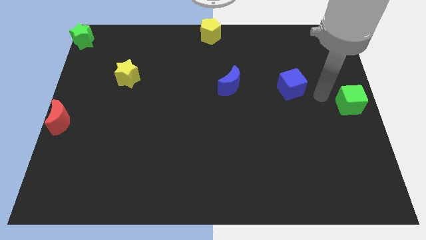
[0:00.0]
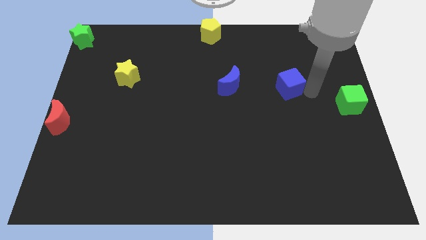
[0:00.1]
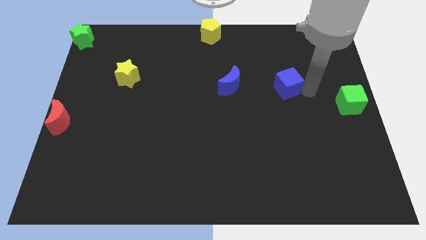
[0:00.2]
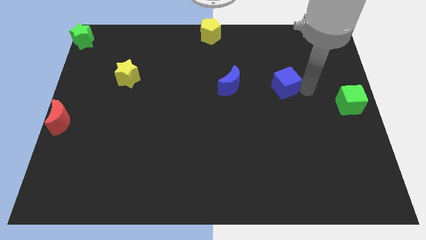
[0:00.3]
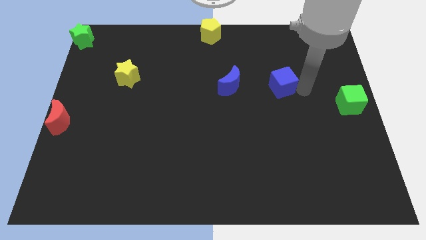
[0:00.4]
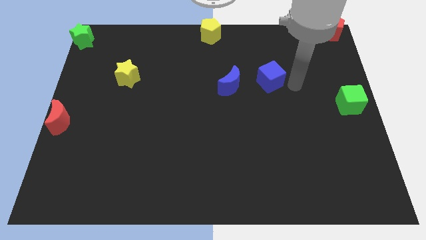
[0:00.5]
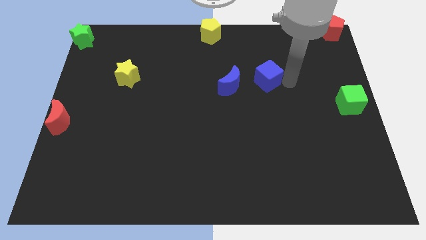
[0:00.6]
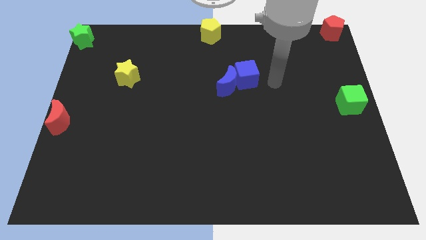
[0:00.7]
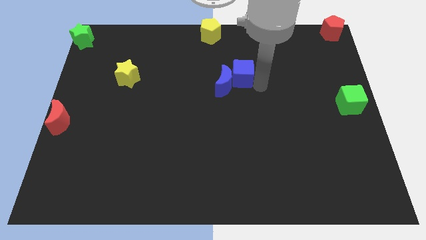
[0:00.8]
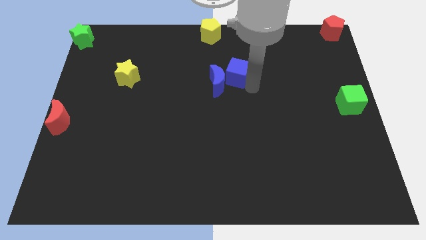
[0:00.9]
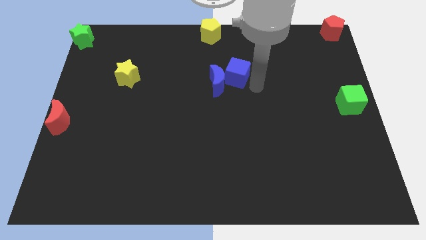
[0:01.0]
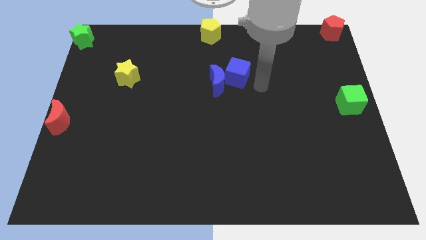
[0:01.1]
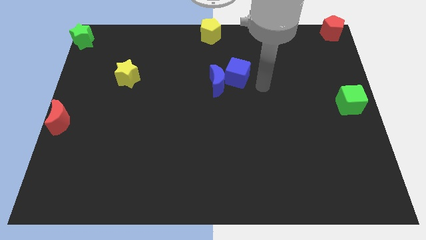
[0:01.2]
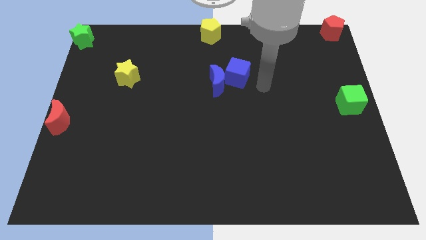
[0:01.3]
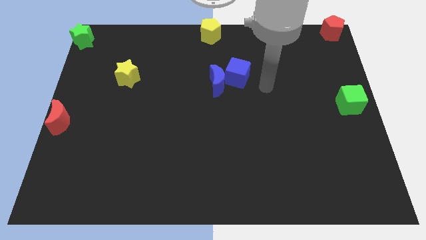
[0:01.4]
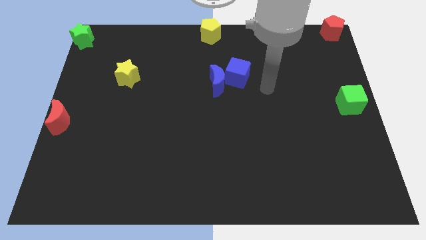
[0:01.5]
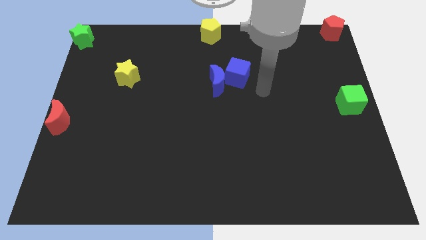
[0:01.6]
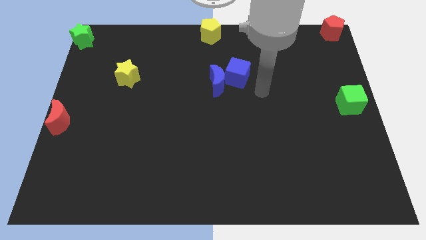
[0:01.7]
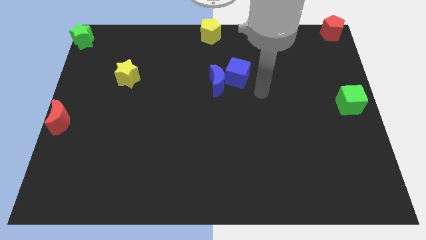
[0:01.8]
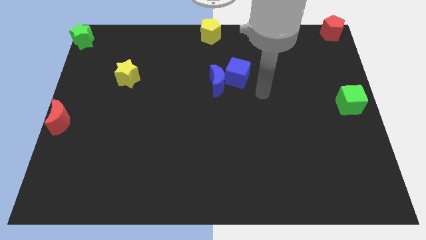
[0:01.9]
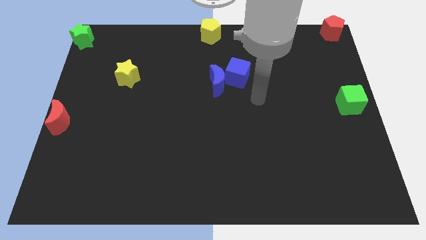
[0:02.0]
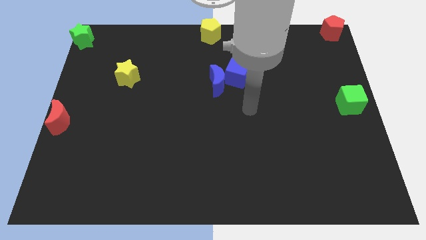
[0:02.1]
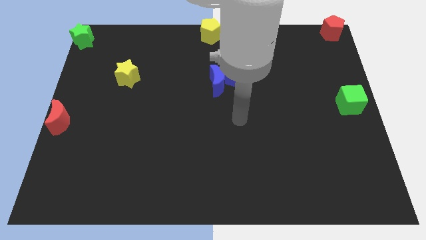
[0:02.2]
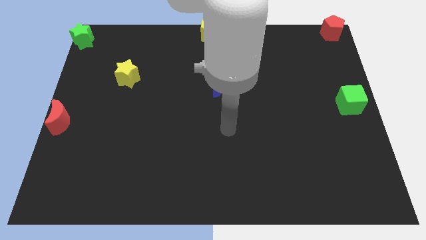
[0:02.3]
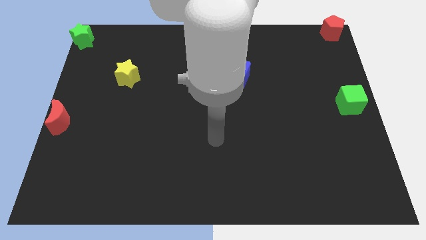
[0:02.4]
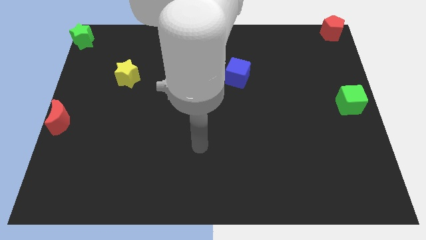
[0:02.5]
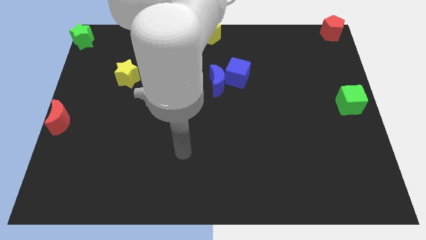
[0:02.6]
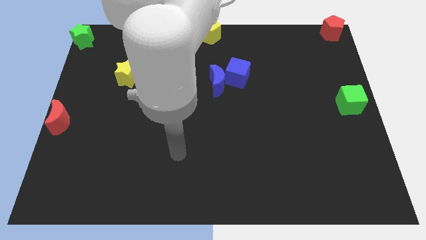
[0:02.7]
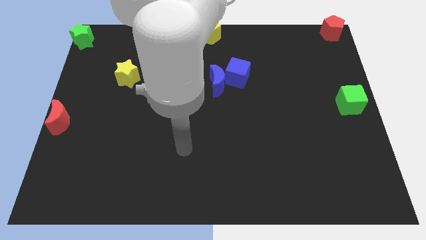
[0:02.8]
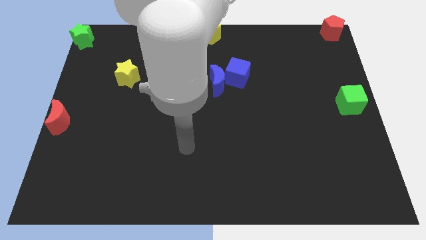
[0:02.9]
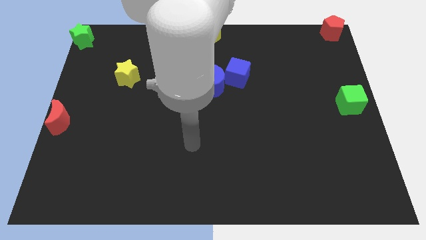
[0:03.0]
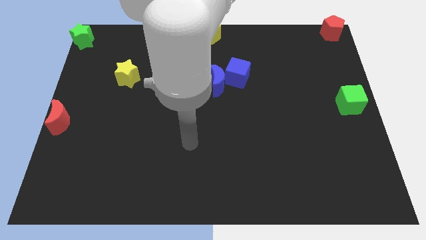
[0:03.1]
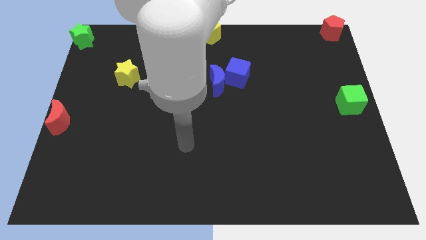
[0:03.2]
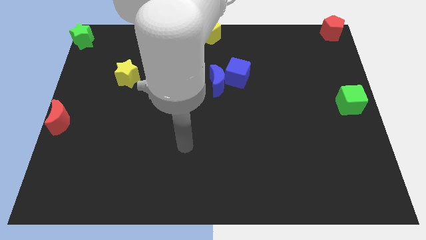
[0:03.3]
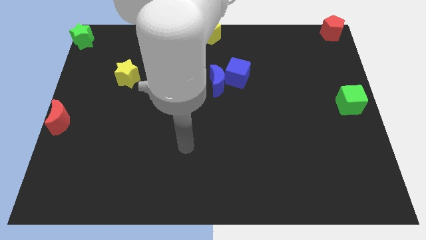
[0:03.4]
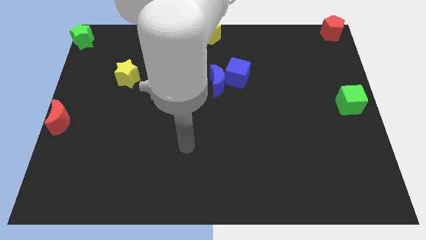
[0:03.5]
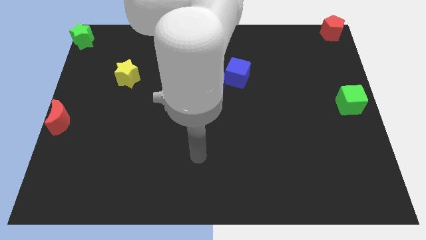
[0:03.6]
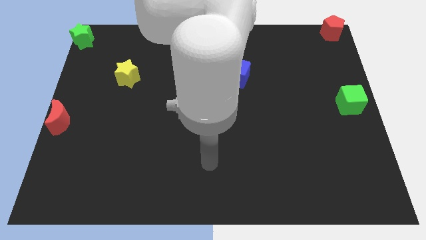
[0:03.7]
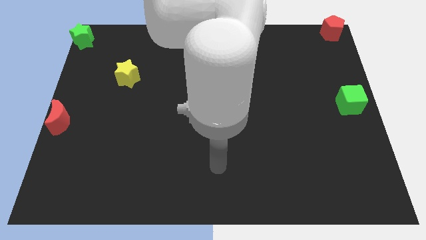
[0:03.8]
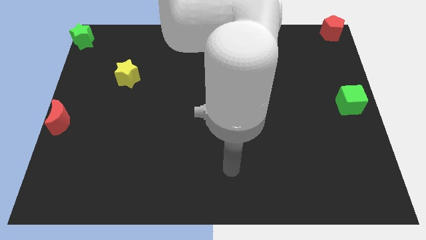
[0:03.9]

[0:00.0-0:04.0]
push the blue cube into the blue crescent

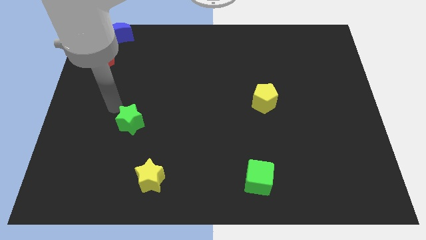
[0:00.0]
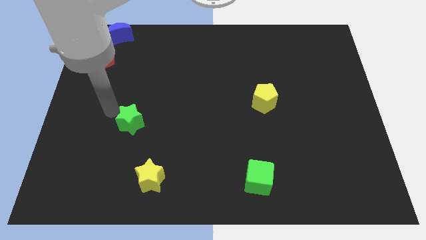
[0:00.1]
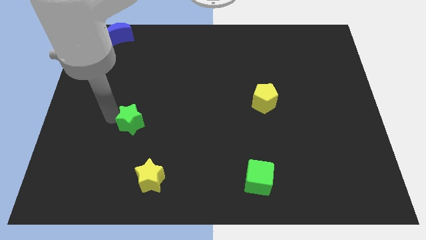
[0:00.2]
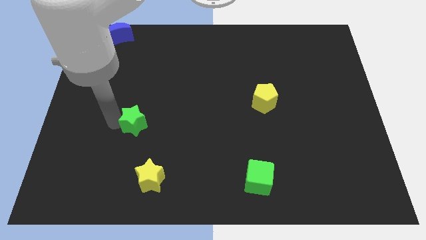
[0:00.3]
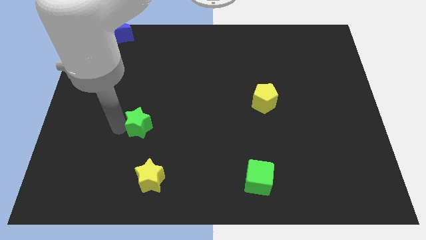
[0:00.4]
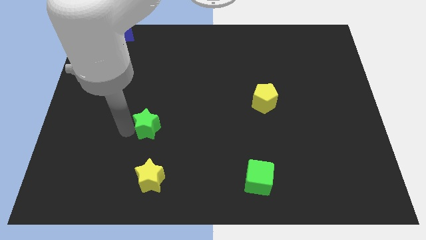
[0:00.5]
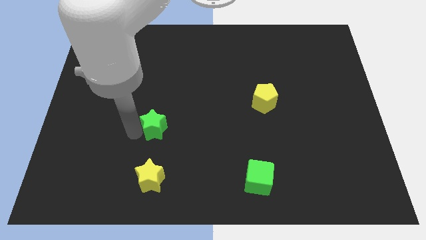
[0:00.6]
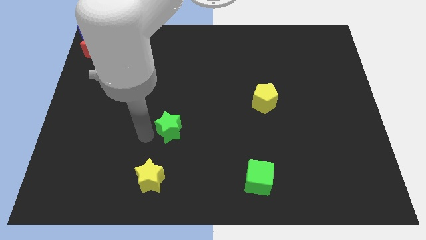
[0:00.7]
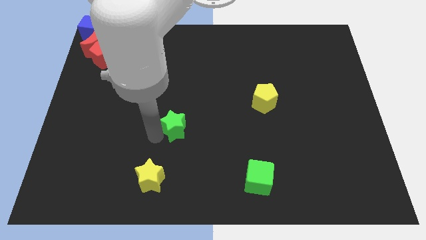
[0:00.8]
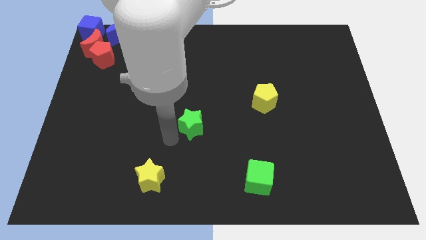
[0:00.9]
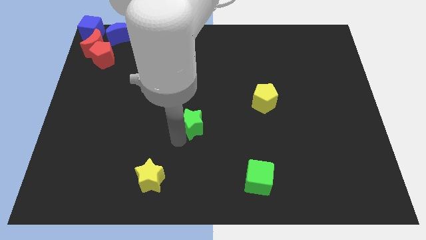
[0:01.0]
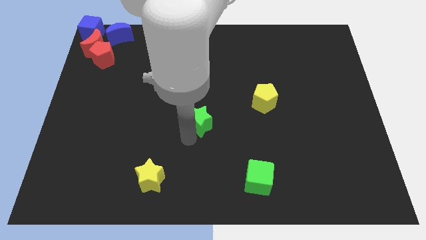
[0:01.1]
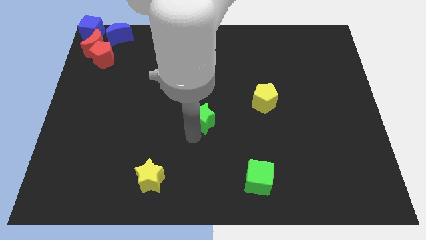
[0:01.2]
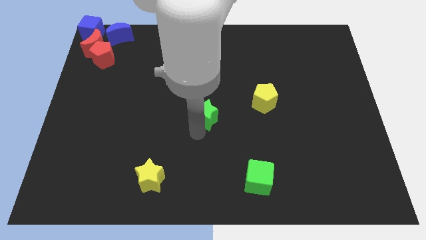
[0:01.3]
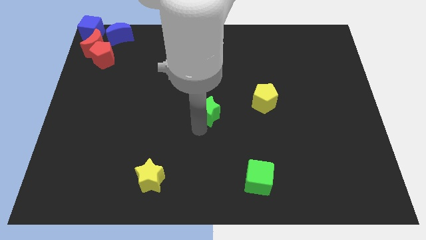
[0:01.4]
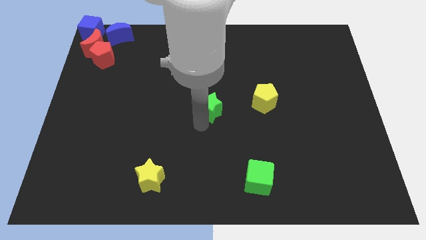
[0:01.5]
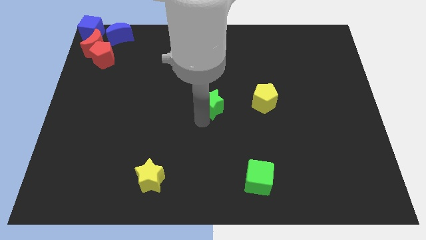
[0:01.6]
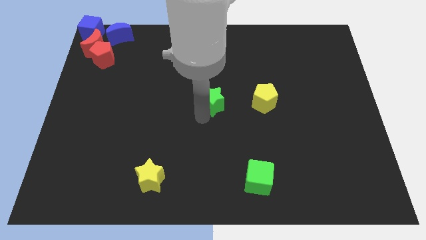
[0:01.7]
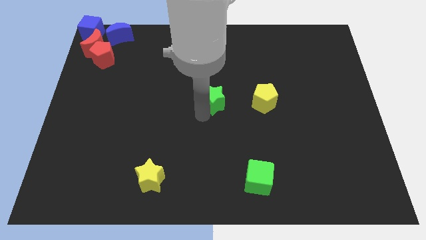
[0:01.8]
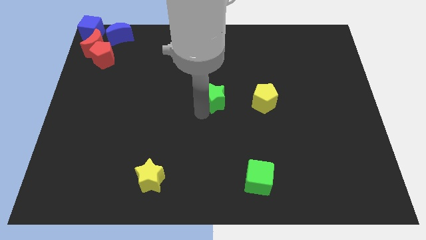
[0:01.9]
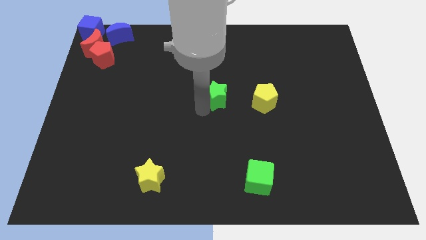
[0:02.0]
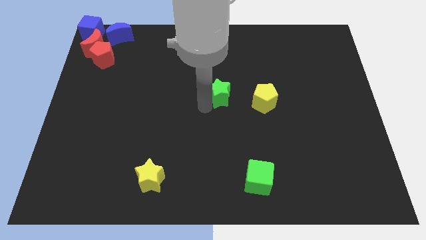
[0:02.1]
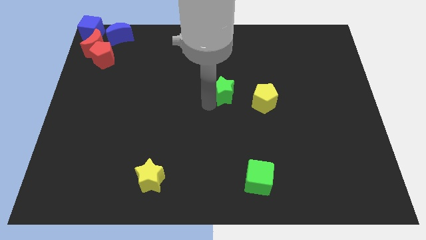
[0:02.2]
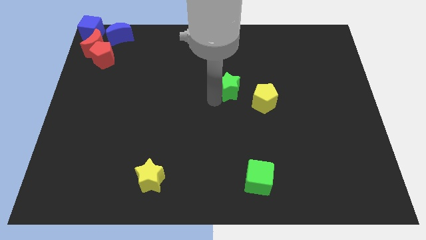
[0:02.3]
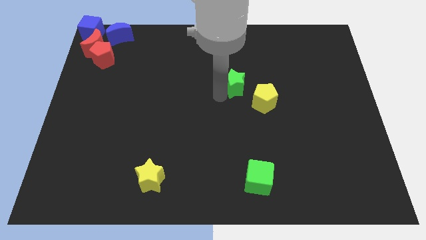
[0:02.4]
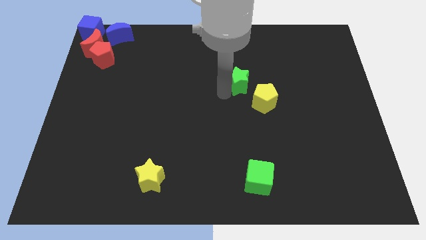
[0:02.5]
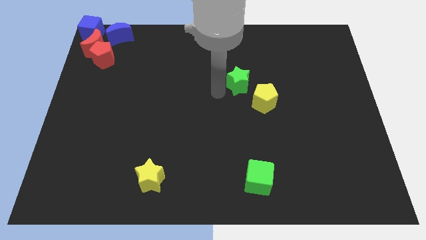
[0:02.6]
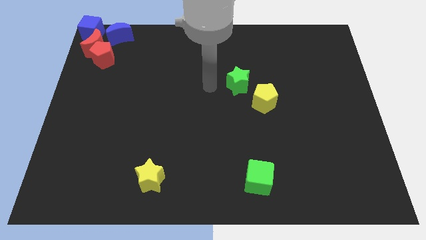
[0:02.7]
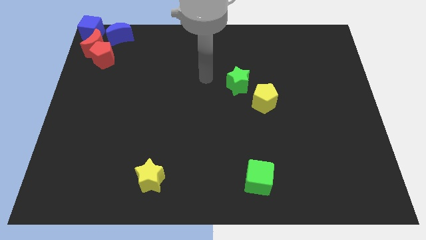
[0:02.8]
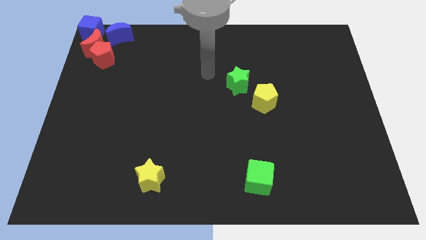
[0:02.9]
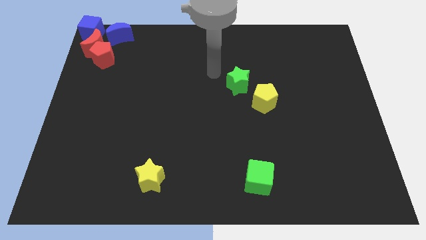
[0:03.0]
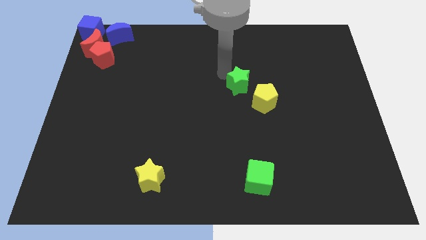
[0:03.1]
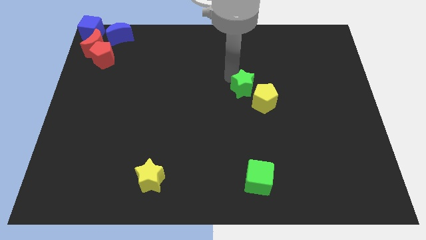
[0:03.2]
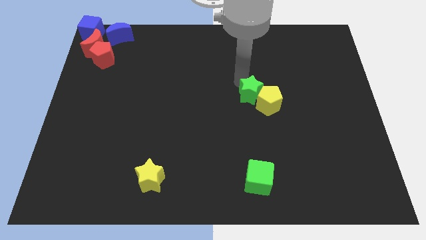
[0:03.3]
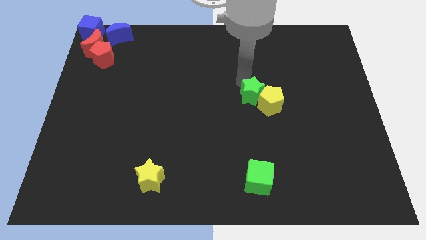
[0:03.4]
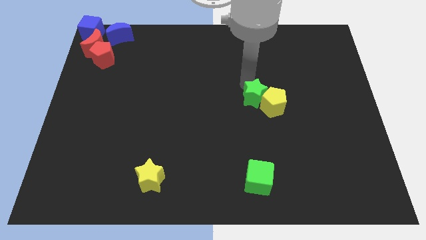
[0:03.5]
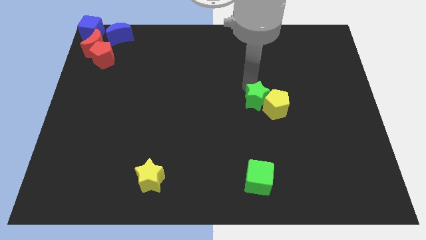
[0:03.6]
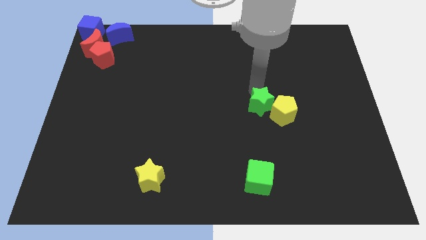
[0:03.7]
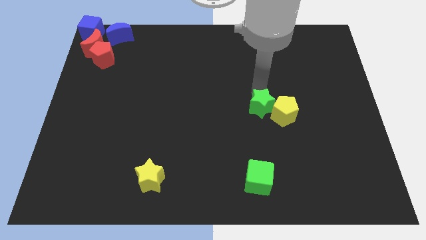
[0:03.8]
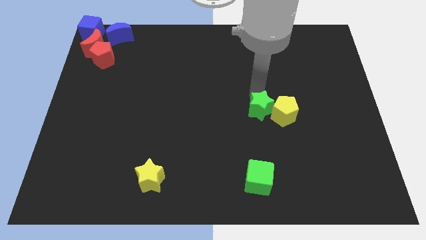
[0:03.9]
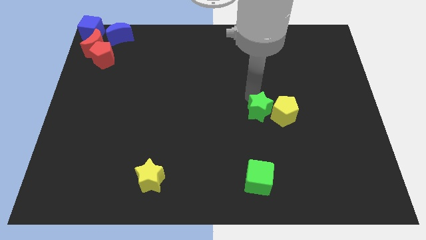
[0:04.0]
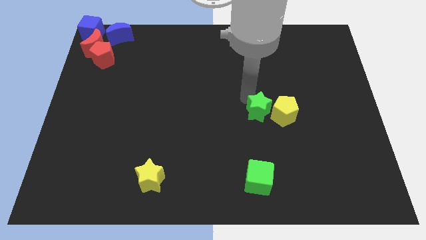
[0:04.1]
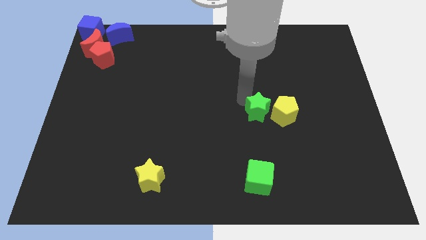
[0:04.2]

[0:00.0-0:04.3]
place green star left to yellow pentagon

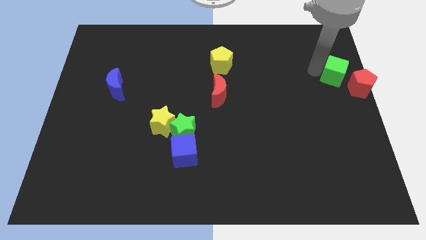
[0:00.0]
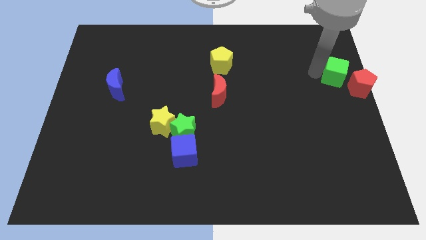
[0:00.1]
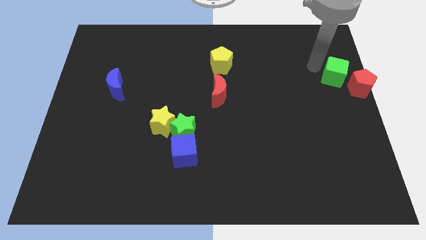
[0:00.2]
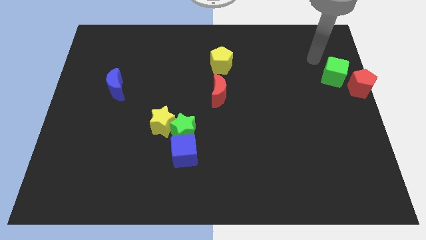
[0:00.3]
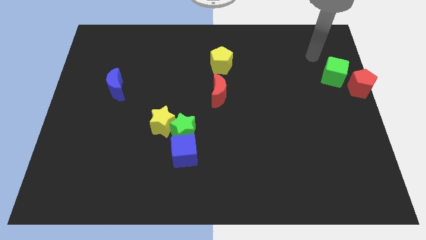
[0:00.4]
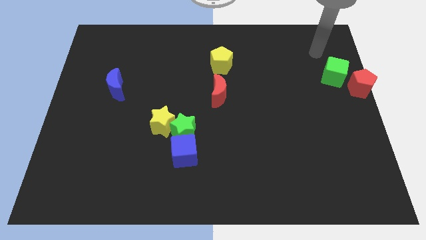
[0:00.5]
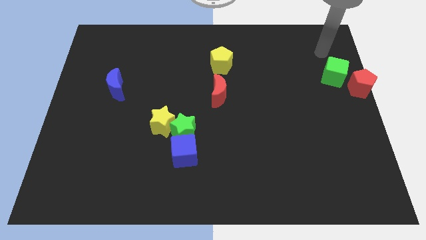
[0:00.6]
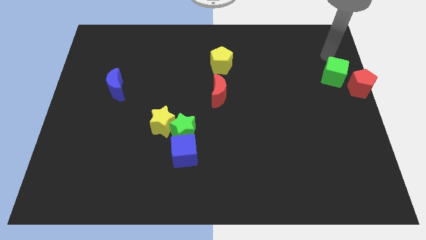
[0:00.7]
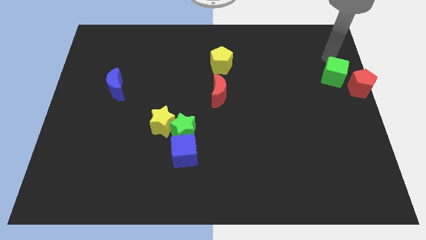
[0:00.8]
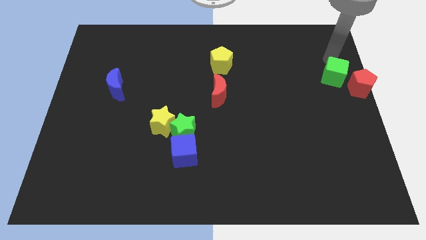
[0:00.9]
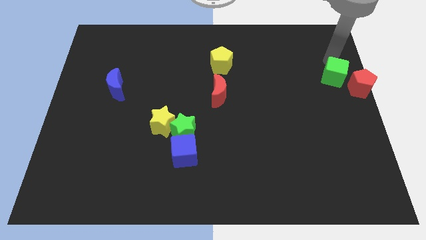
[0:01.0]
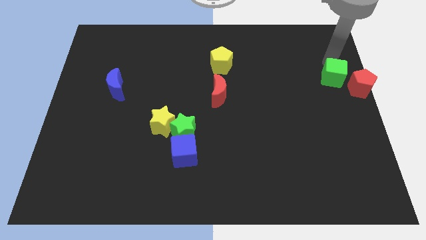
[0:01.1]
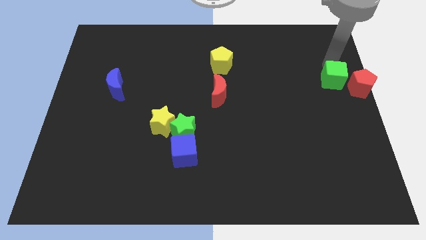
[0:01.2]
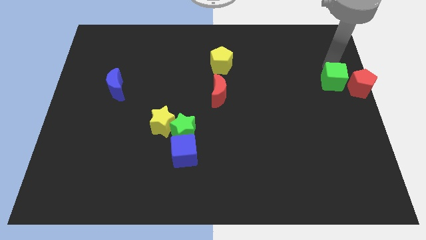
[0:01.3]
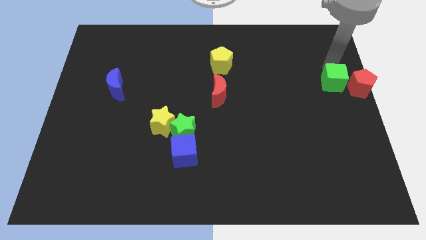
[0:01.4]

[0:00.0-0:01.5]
move the green cube right center of the board
